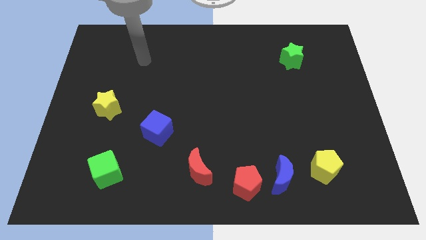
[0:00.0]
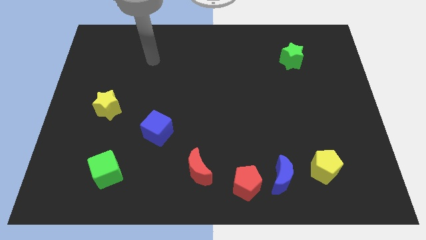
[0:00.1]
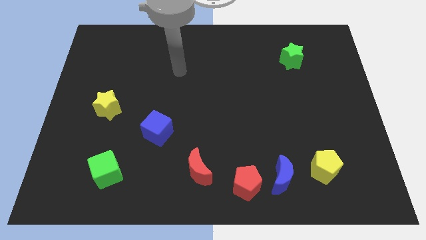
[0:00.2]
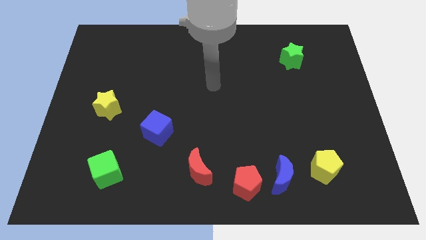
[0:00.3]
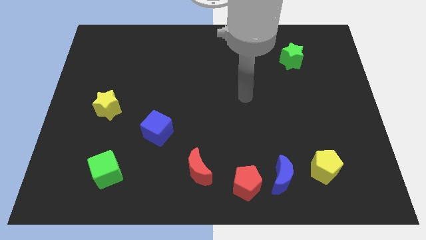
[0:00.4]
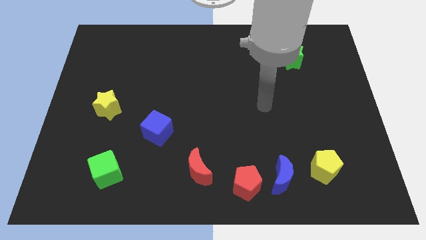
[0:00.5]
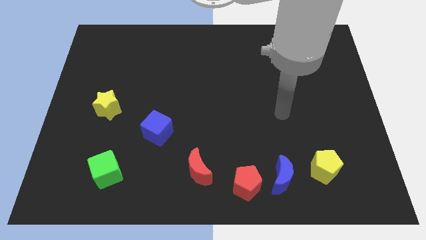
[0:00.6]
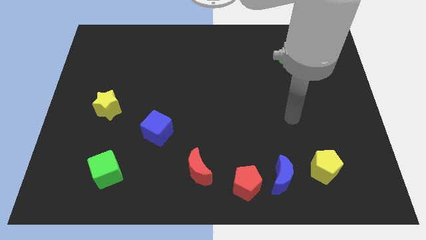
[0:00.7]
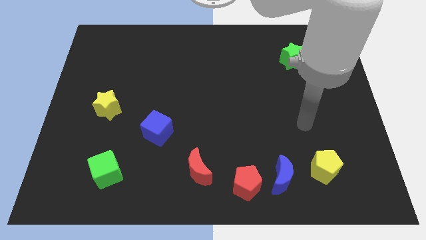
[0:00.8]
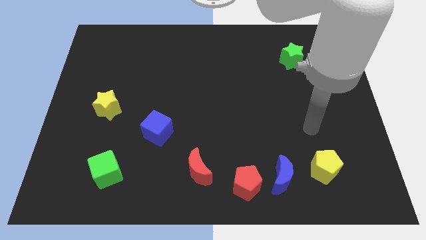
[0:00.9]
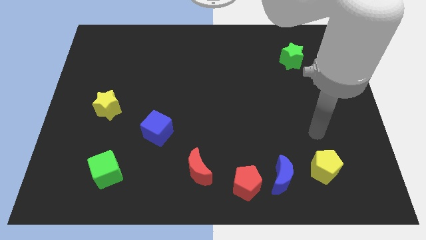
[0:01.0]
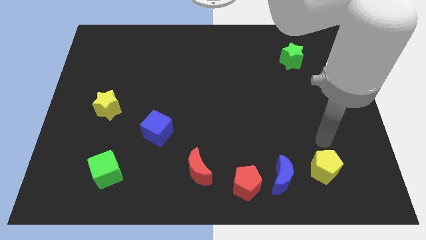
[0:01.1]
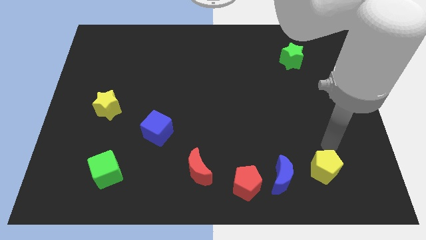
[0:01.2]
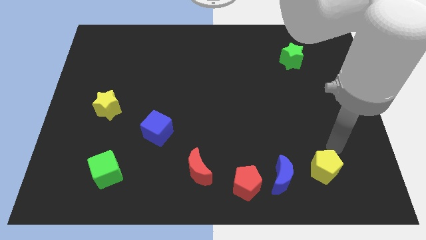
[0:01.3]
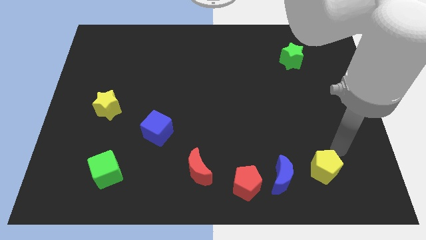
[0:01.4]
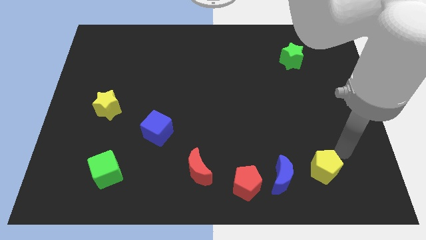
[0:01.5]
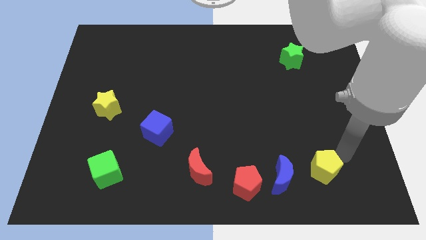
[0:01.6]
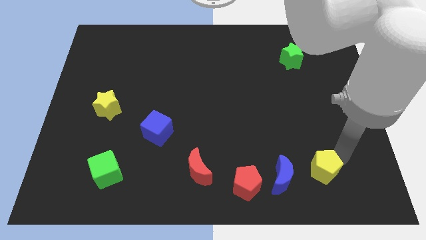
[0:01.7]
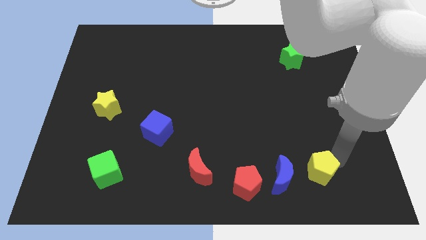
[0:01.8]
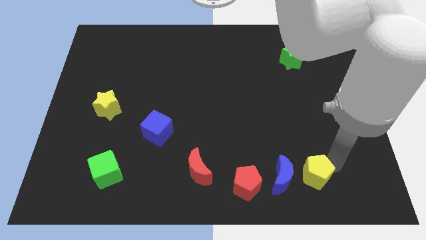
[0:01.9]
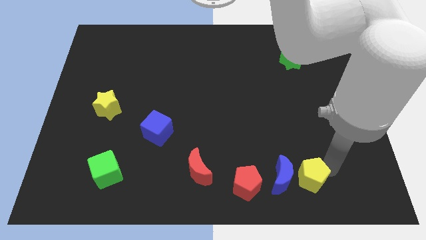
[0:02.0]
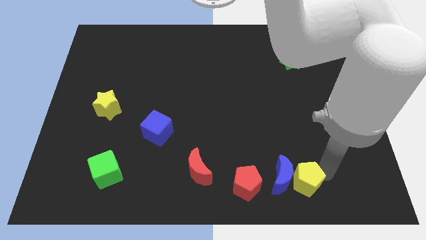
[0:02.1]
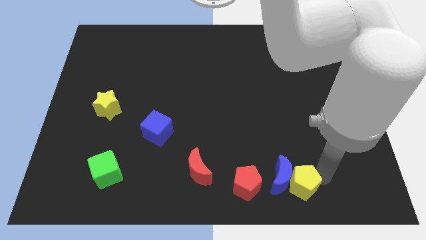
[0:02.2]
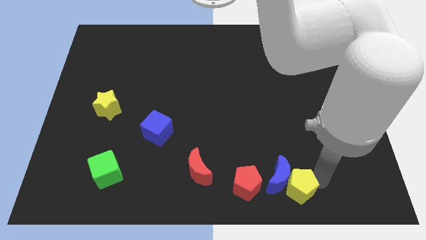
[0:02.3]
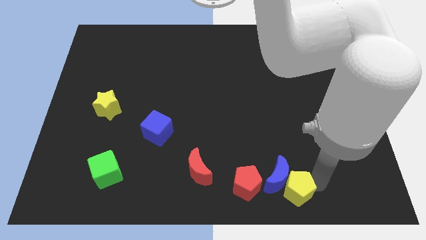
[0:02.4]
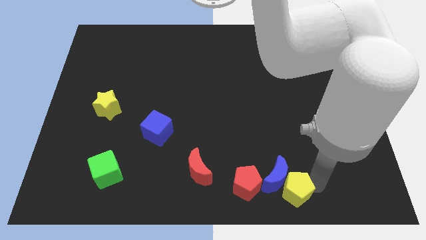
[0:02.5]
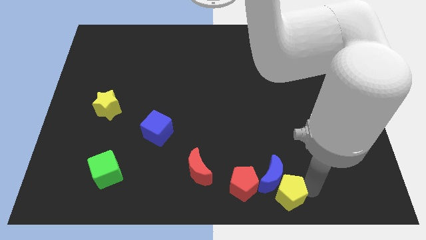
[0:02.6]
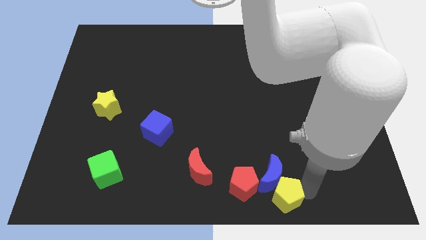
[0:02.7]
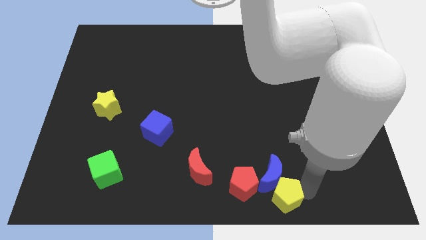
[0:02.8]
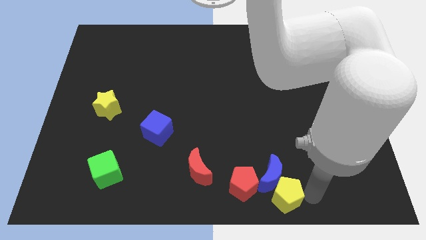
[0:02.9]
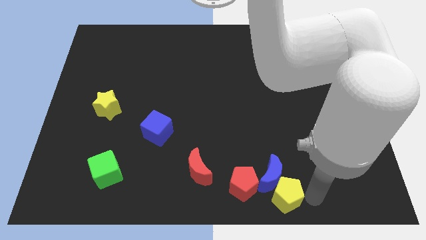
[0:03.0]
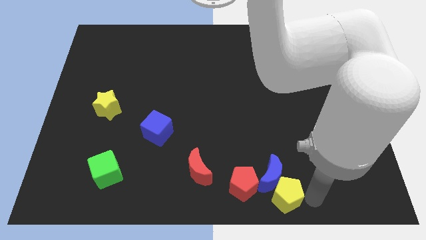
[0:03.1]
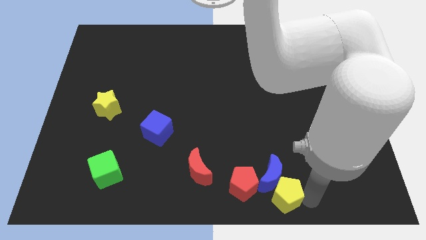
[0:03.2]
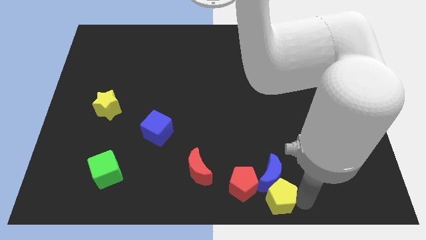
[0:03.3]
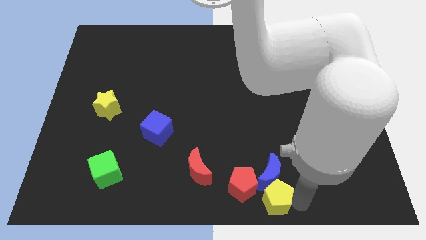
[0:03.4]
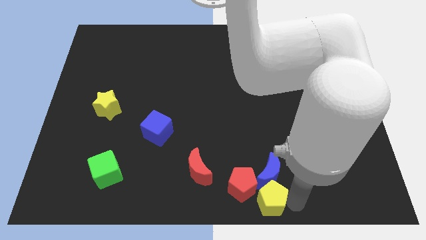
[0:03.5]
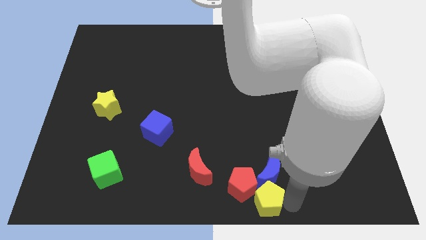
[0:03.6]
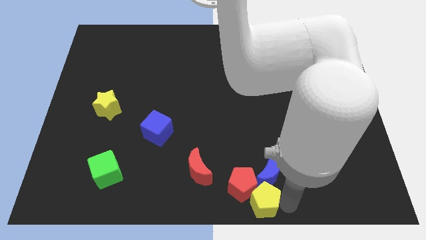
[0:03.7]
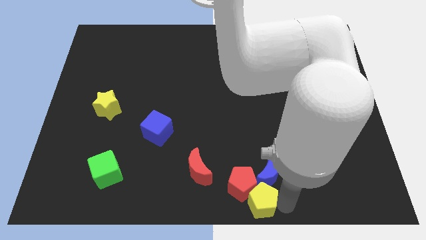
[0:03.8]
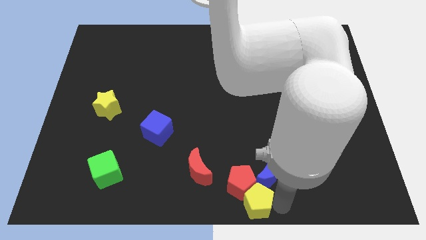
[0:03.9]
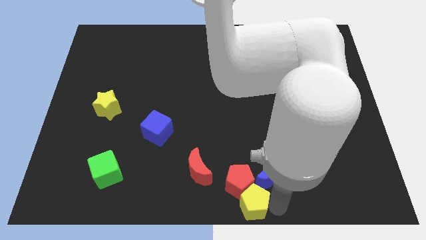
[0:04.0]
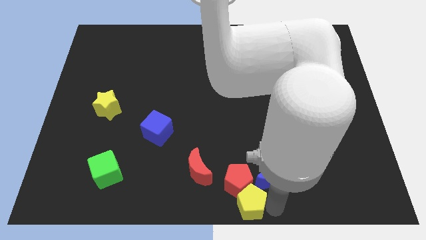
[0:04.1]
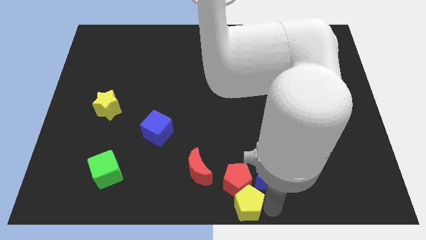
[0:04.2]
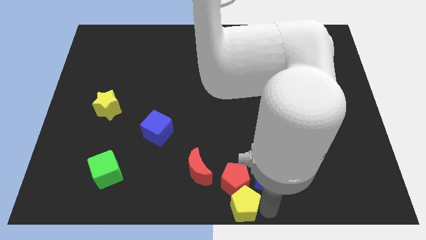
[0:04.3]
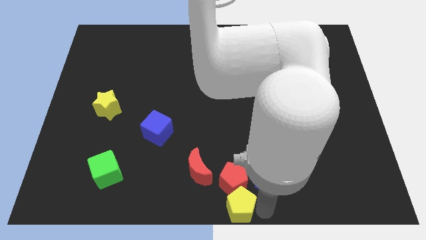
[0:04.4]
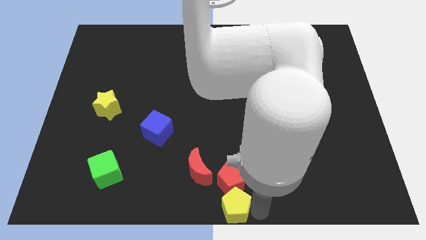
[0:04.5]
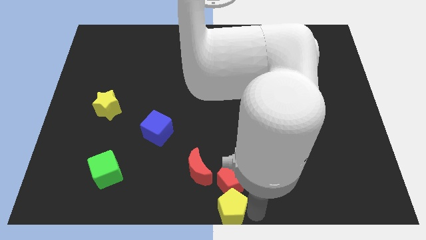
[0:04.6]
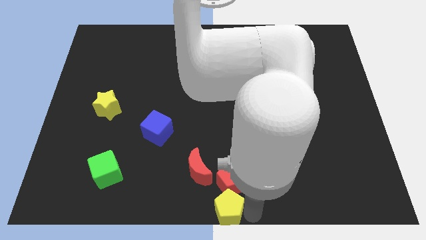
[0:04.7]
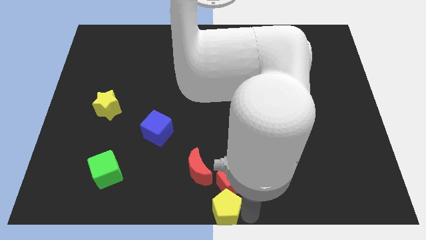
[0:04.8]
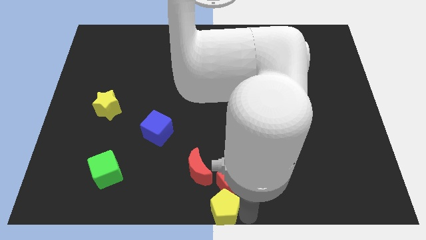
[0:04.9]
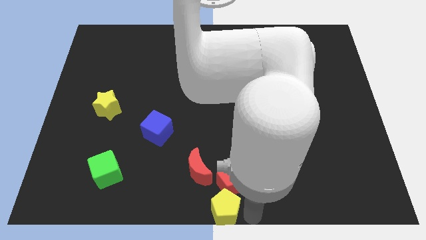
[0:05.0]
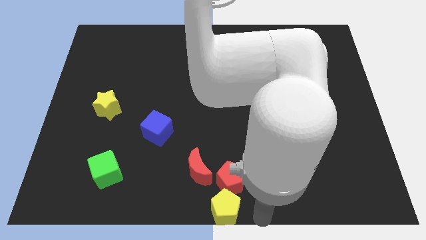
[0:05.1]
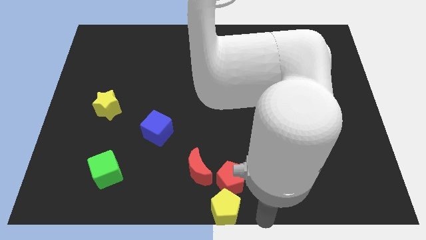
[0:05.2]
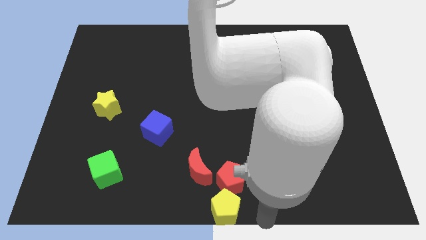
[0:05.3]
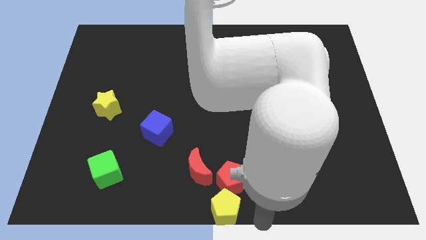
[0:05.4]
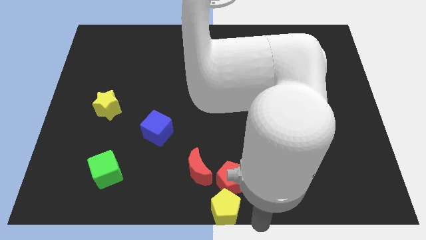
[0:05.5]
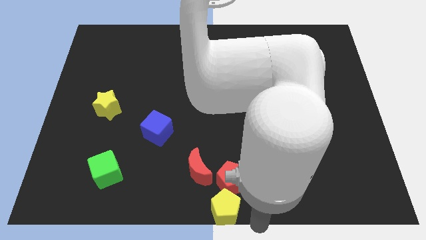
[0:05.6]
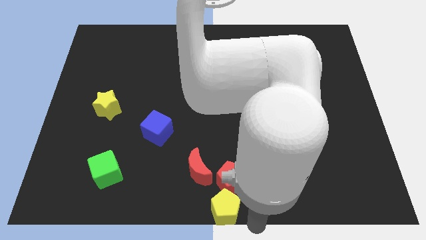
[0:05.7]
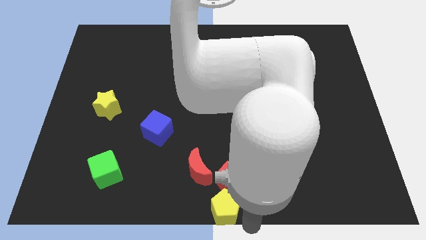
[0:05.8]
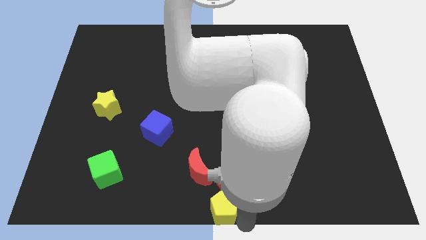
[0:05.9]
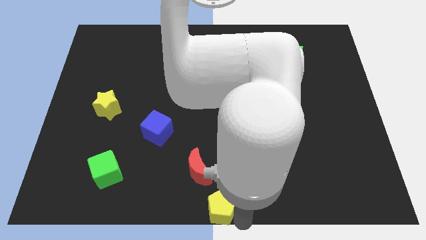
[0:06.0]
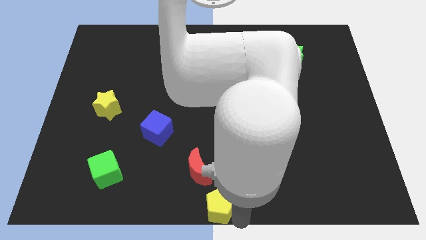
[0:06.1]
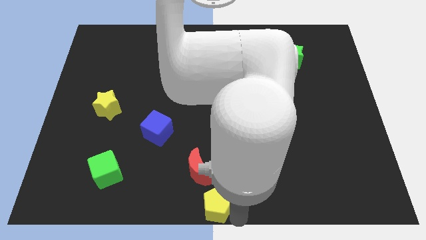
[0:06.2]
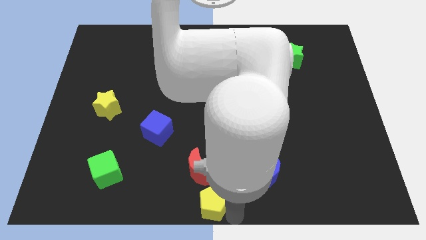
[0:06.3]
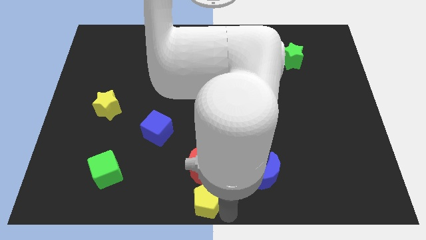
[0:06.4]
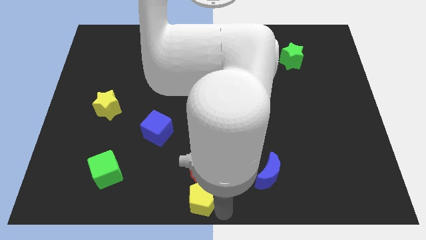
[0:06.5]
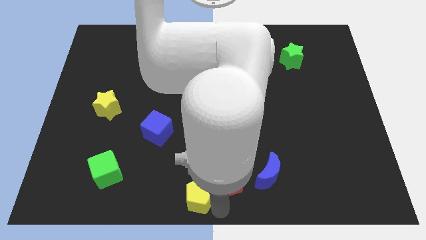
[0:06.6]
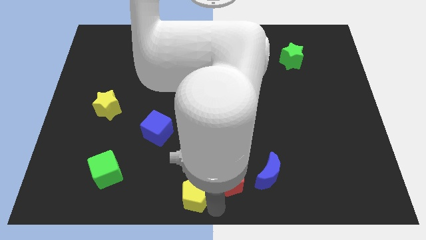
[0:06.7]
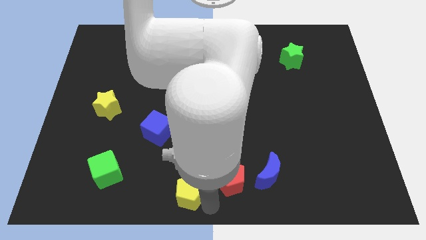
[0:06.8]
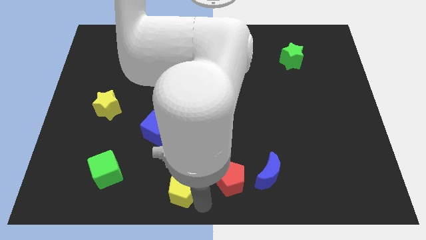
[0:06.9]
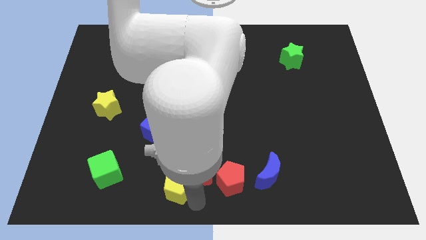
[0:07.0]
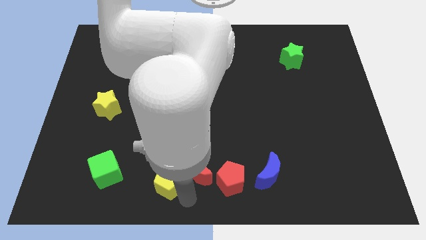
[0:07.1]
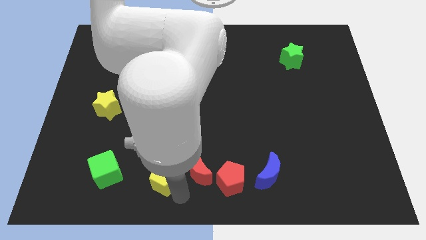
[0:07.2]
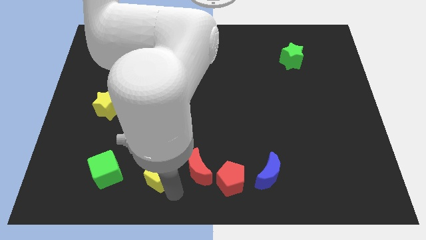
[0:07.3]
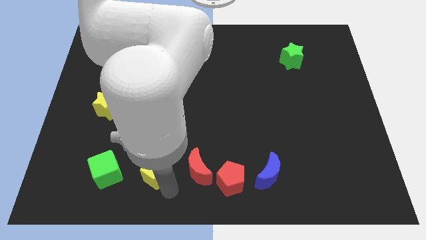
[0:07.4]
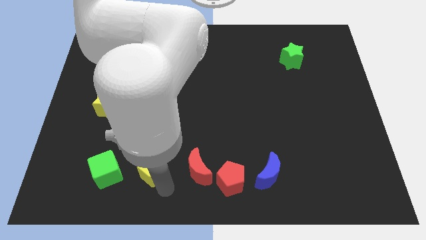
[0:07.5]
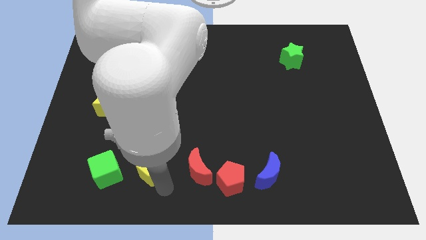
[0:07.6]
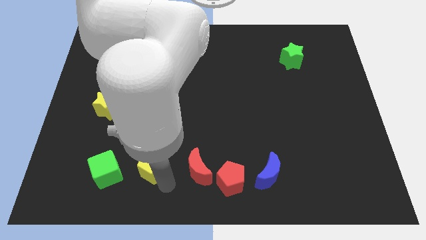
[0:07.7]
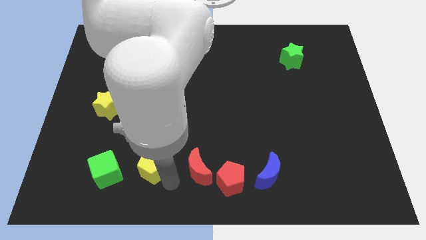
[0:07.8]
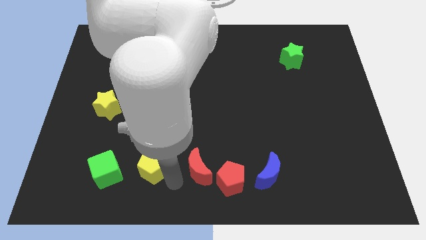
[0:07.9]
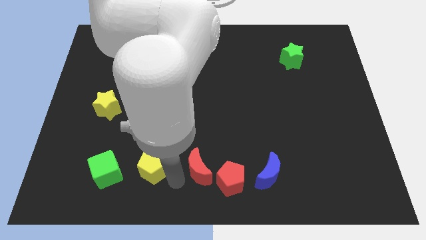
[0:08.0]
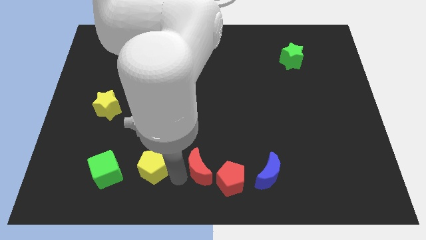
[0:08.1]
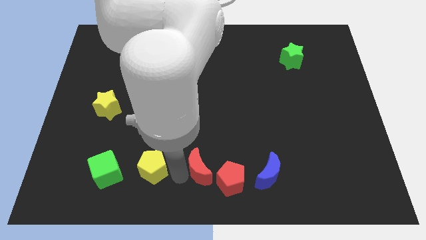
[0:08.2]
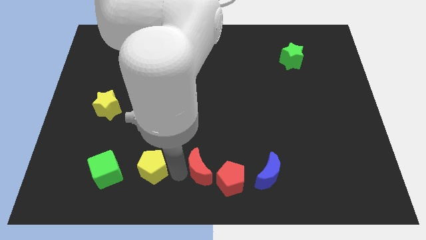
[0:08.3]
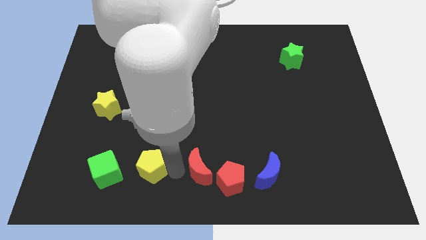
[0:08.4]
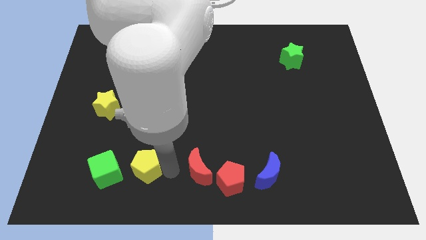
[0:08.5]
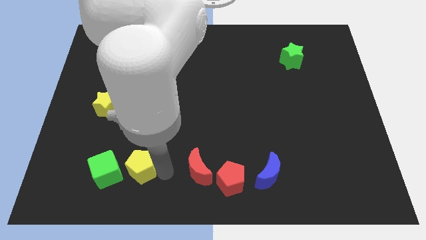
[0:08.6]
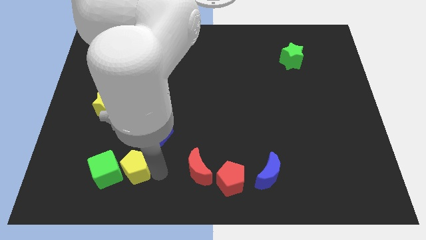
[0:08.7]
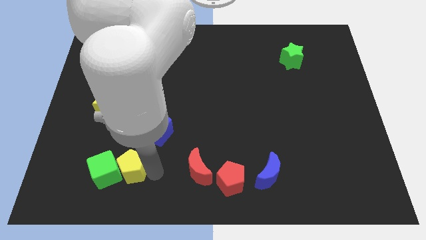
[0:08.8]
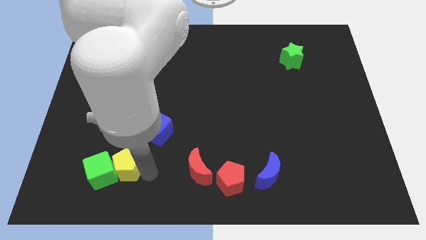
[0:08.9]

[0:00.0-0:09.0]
push the yellow pentagon close to the green cube
